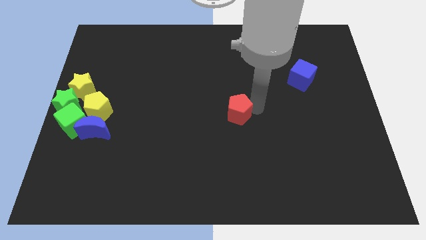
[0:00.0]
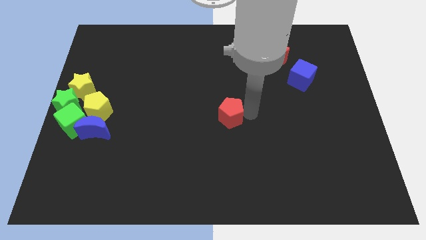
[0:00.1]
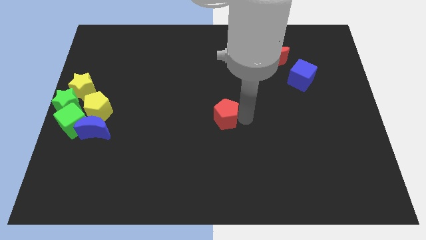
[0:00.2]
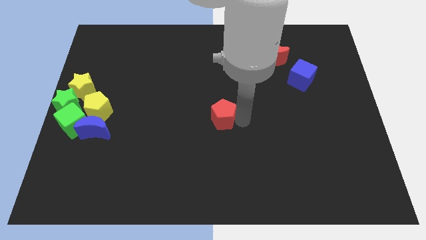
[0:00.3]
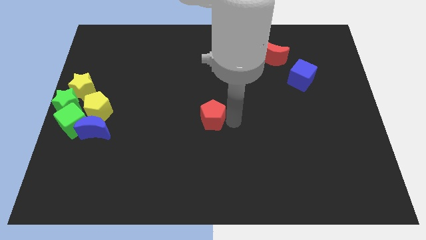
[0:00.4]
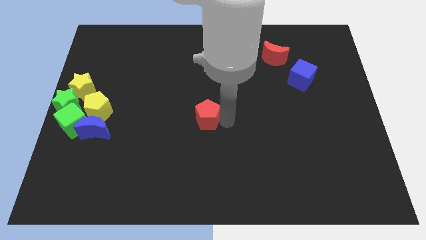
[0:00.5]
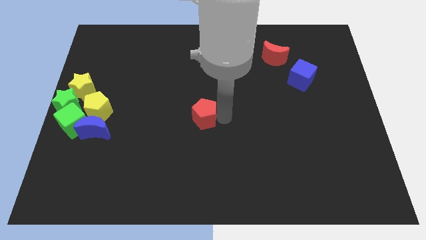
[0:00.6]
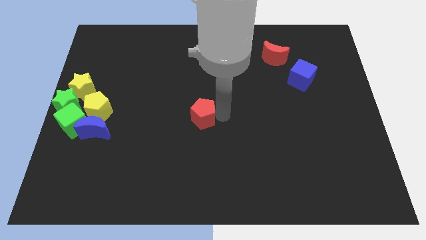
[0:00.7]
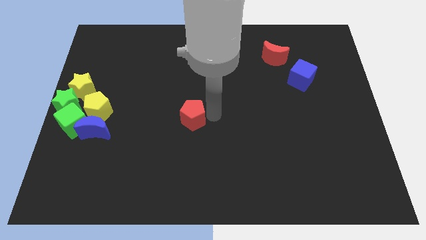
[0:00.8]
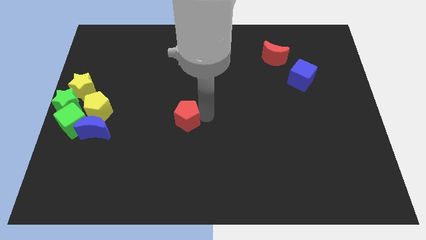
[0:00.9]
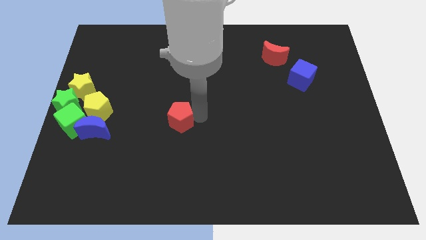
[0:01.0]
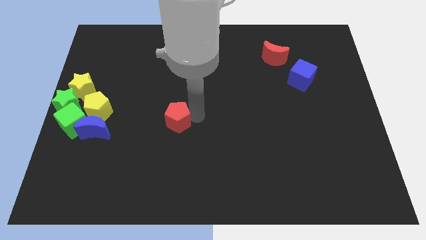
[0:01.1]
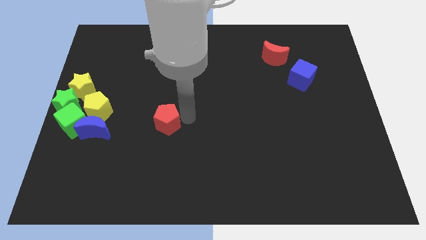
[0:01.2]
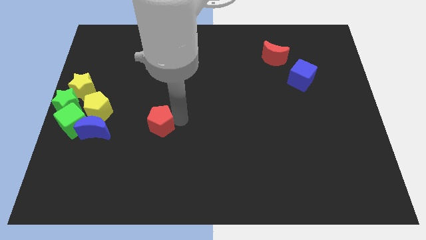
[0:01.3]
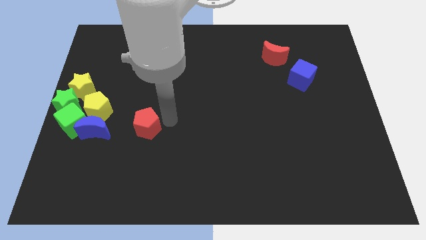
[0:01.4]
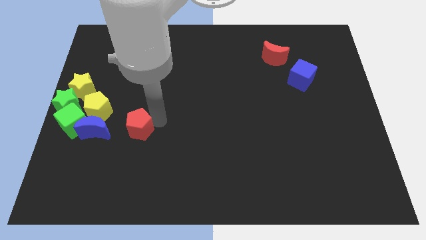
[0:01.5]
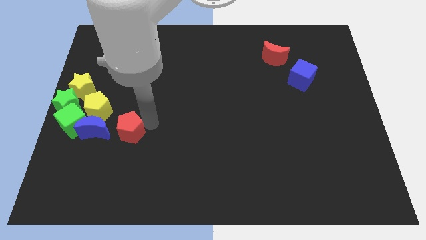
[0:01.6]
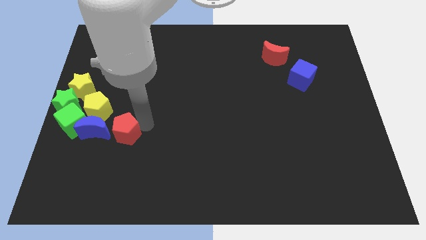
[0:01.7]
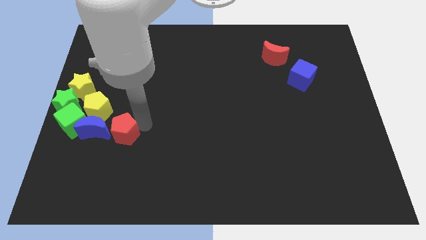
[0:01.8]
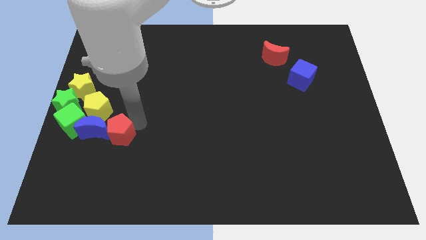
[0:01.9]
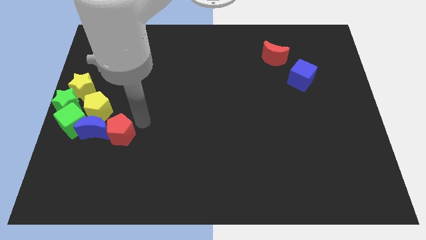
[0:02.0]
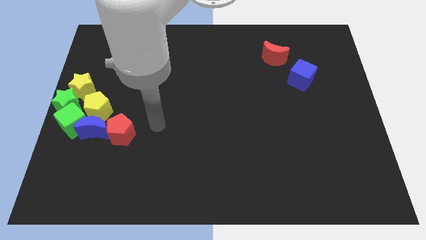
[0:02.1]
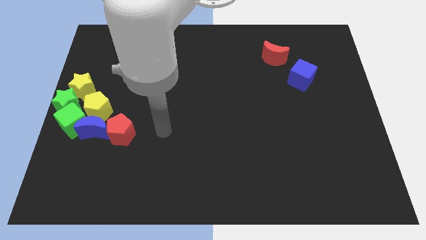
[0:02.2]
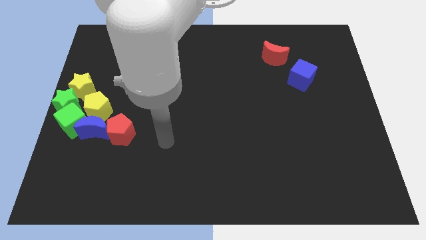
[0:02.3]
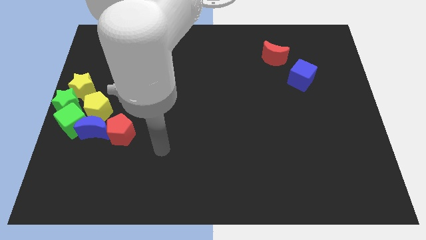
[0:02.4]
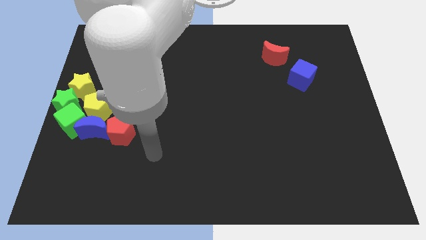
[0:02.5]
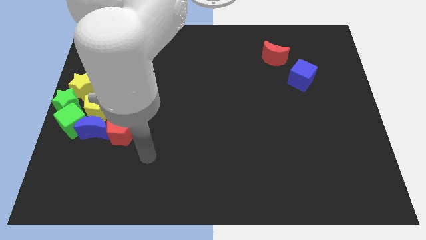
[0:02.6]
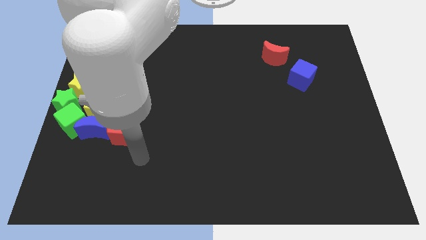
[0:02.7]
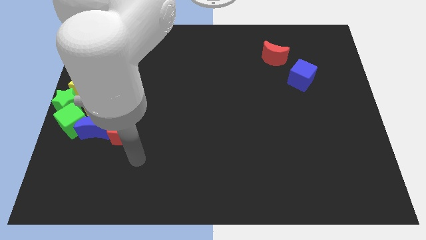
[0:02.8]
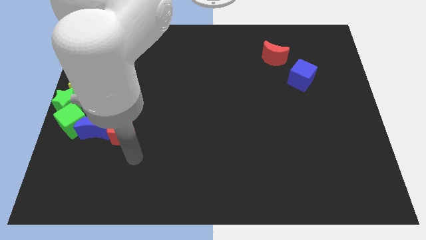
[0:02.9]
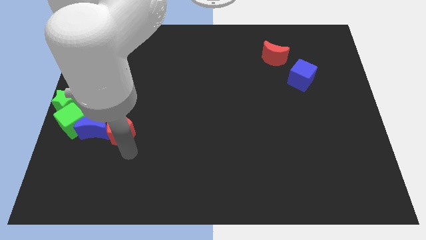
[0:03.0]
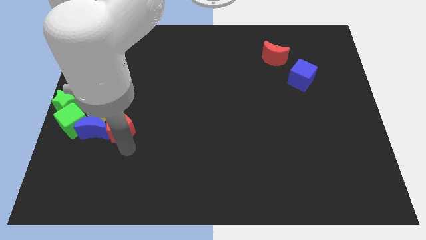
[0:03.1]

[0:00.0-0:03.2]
move the red pentagon to the right of the blue moon

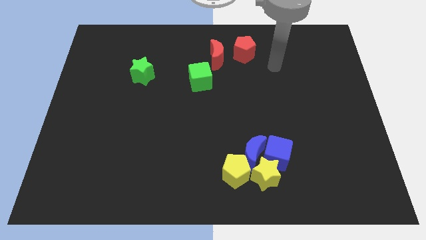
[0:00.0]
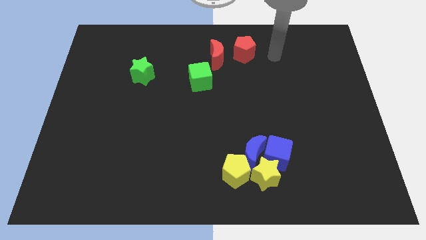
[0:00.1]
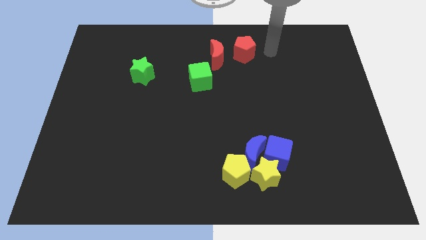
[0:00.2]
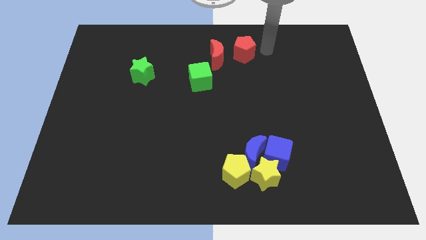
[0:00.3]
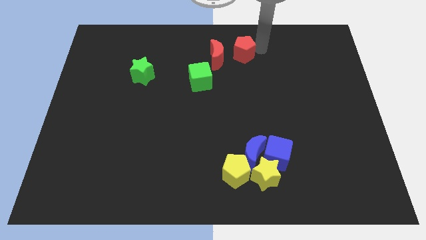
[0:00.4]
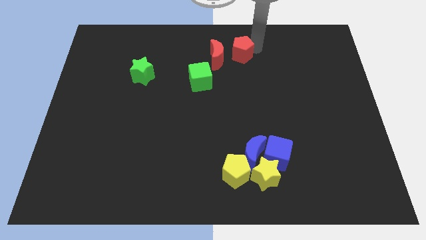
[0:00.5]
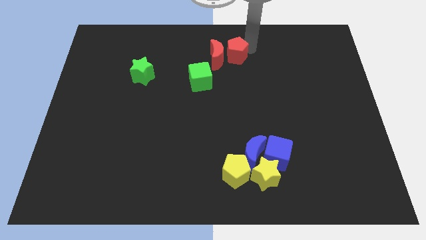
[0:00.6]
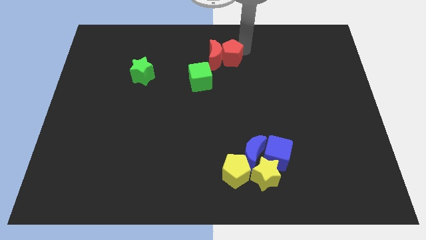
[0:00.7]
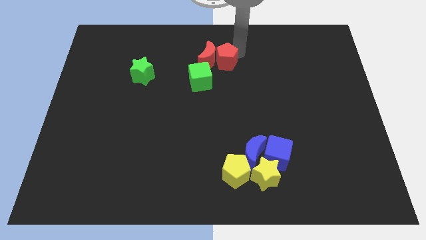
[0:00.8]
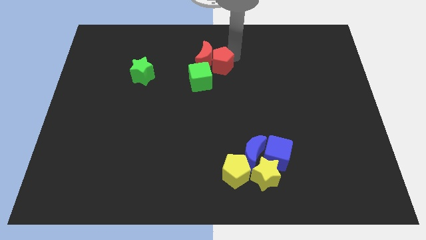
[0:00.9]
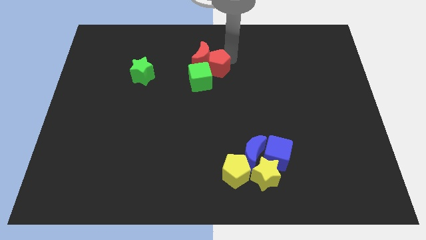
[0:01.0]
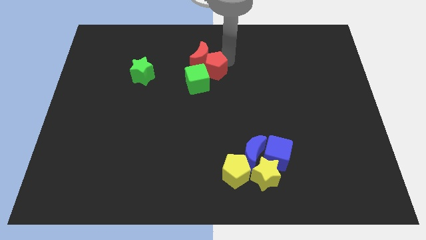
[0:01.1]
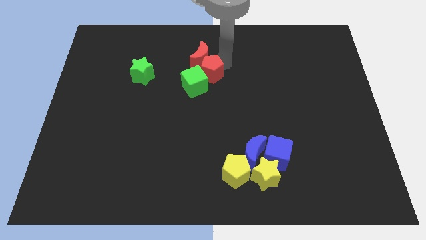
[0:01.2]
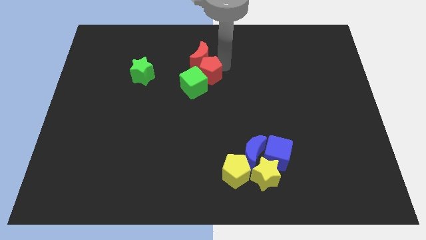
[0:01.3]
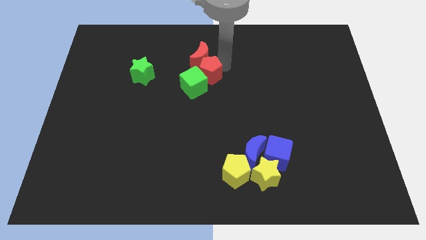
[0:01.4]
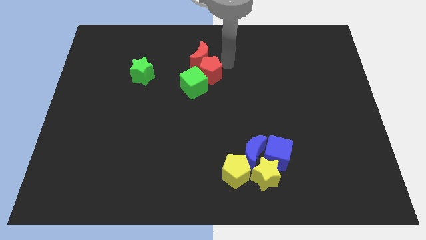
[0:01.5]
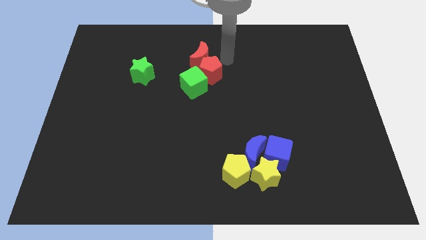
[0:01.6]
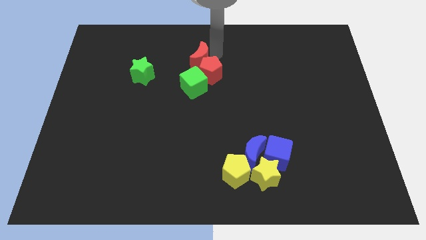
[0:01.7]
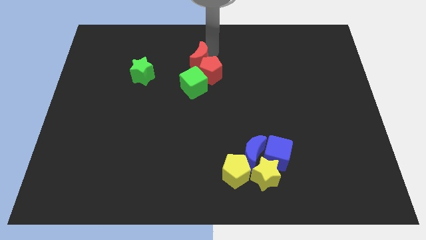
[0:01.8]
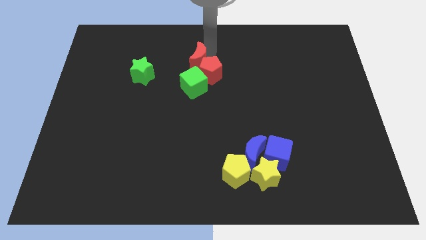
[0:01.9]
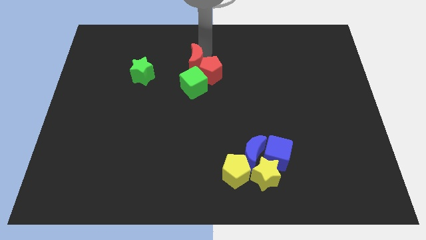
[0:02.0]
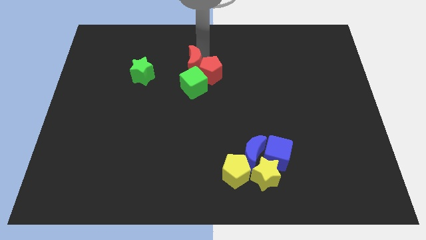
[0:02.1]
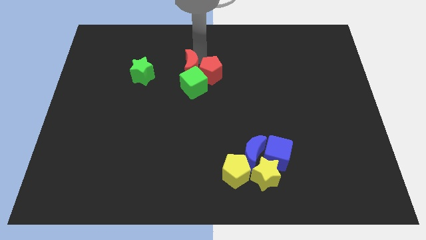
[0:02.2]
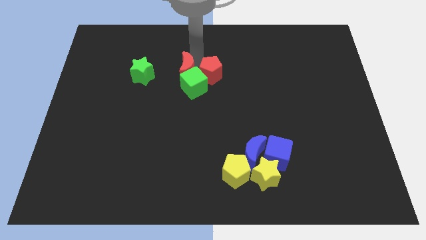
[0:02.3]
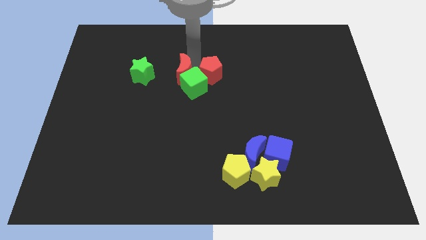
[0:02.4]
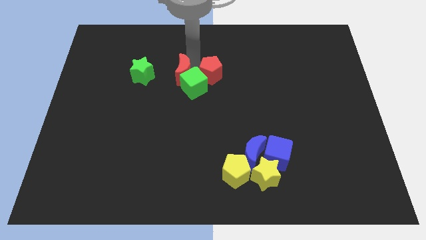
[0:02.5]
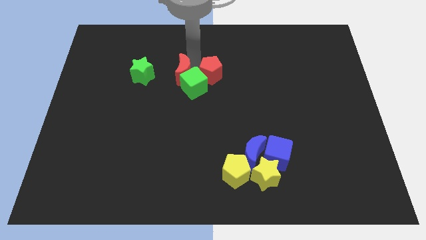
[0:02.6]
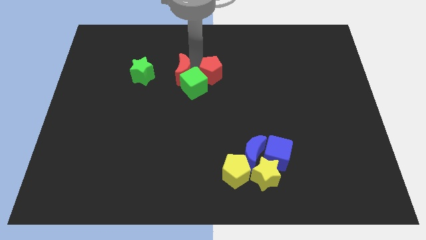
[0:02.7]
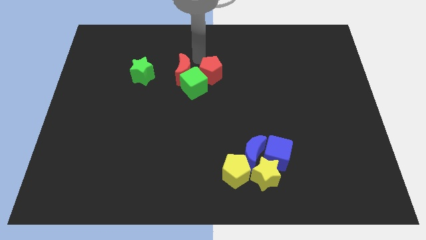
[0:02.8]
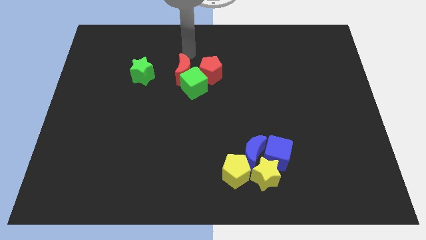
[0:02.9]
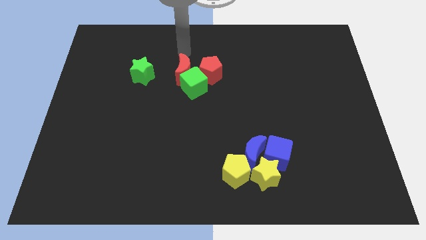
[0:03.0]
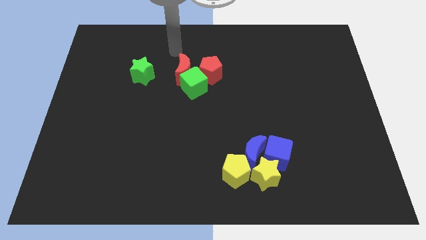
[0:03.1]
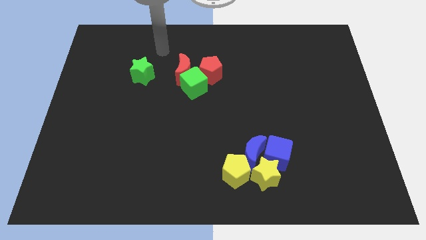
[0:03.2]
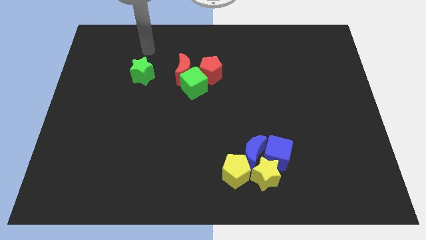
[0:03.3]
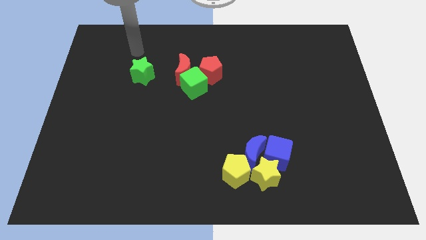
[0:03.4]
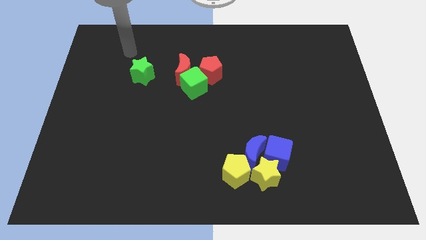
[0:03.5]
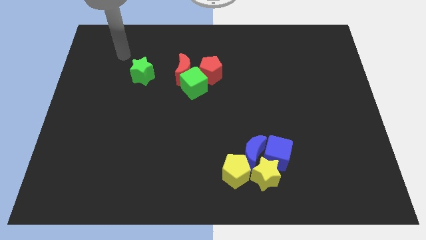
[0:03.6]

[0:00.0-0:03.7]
push the red pentagon towards the green cube

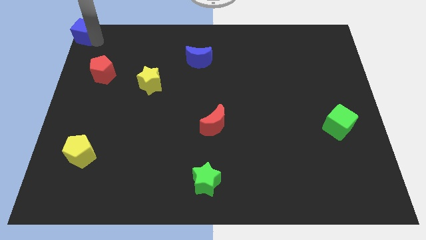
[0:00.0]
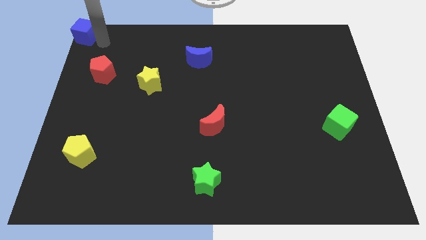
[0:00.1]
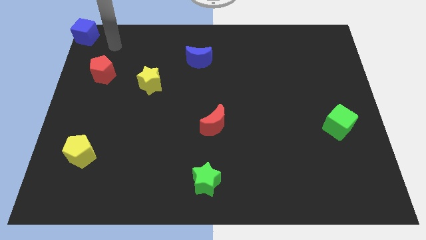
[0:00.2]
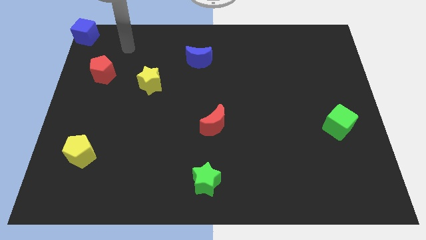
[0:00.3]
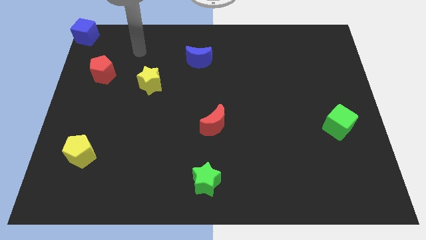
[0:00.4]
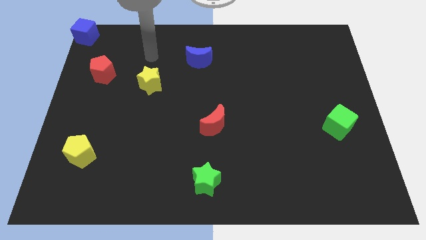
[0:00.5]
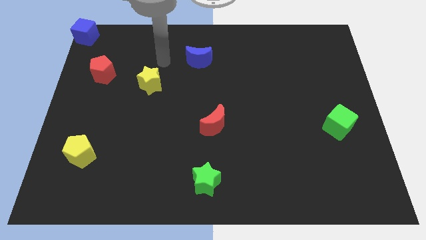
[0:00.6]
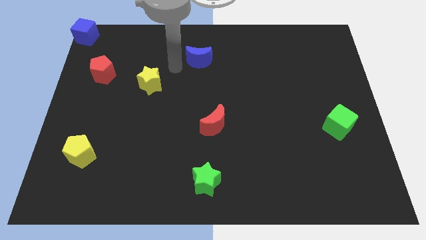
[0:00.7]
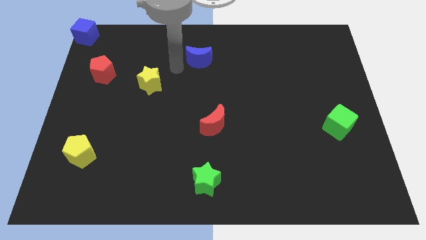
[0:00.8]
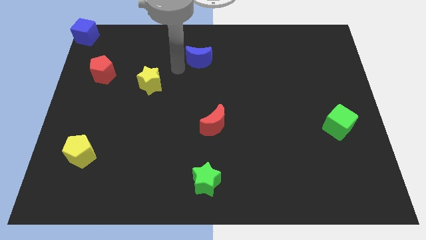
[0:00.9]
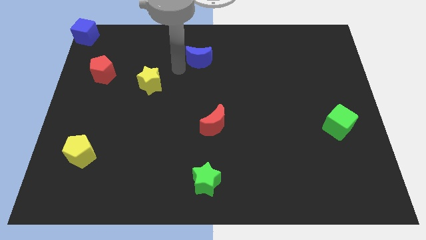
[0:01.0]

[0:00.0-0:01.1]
move your arm away from the blue cube

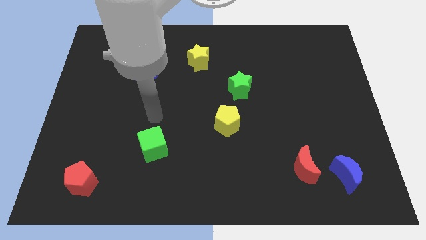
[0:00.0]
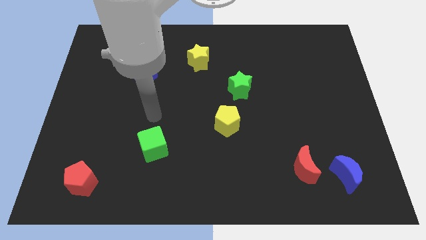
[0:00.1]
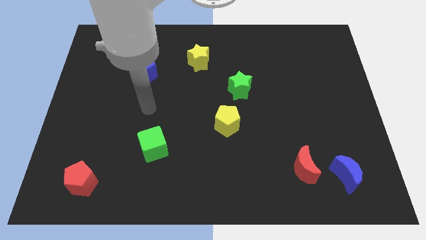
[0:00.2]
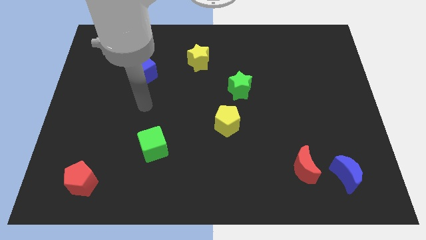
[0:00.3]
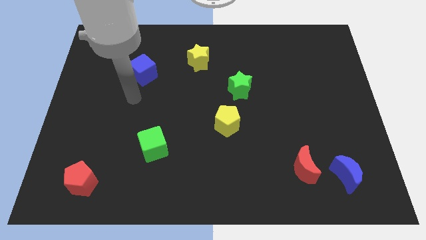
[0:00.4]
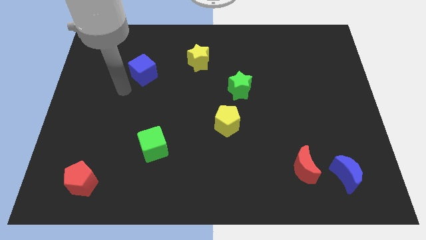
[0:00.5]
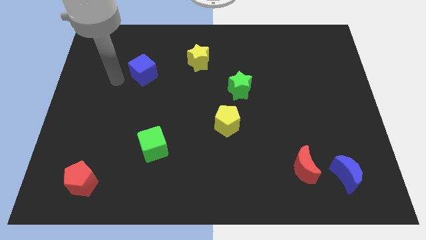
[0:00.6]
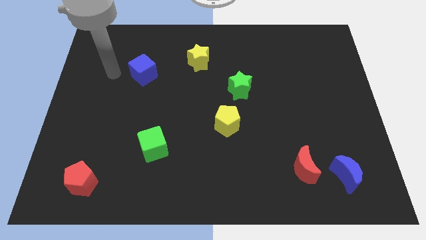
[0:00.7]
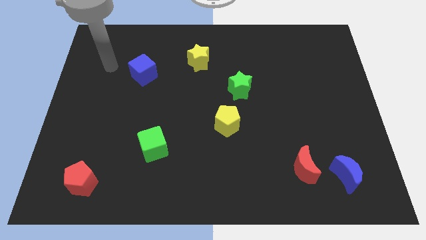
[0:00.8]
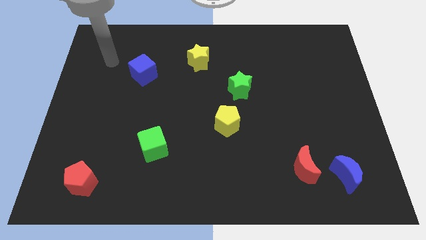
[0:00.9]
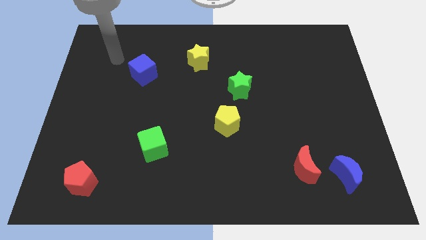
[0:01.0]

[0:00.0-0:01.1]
move your arm to the left of blue cube
